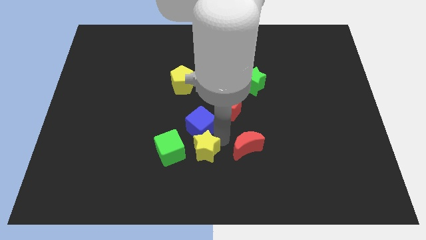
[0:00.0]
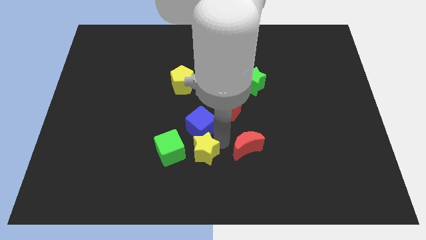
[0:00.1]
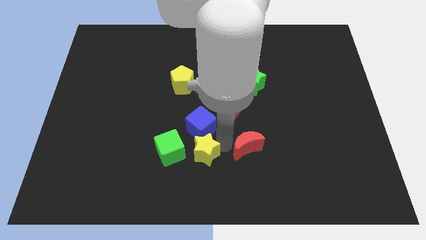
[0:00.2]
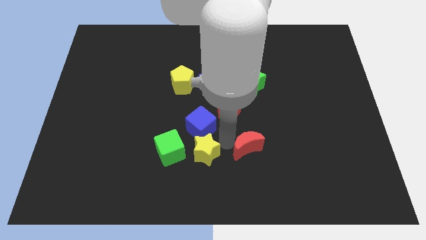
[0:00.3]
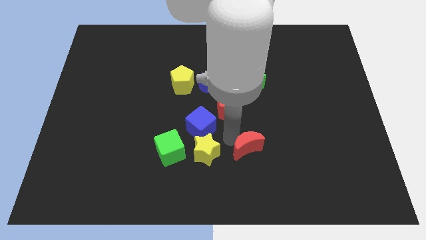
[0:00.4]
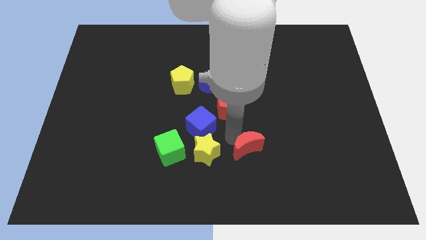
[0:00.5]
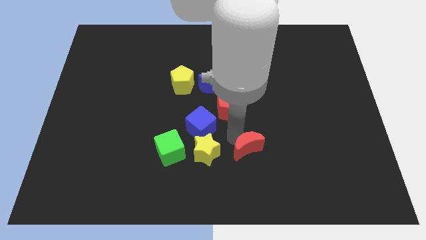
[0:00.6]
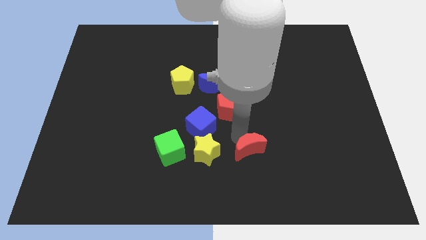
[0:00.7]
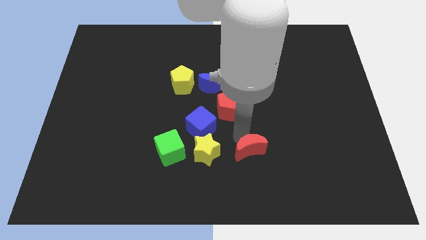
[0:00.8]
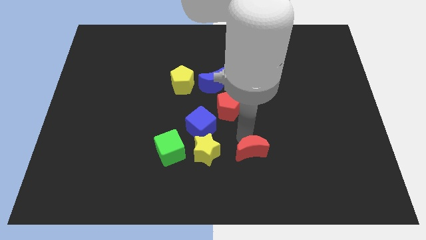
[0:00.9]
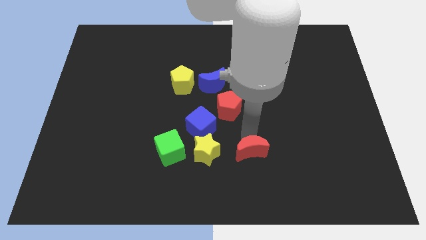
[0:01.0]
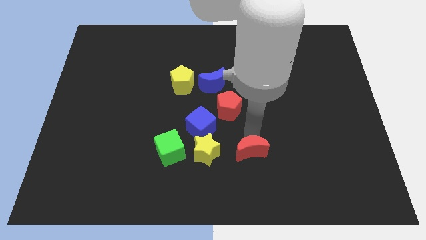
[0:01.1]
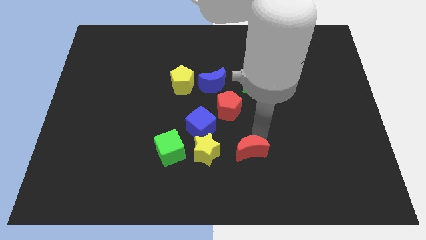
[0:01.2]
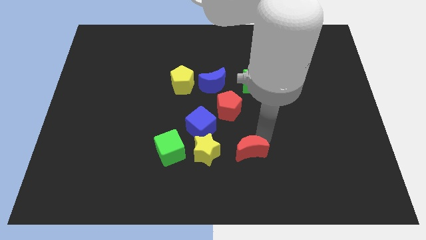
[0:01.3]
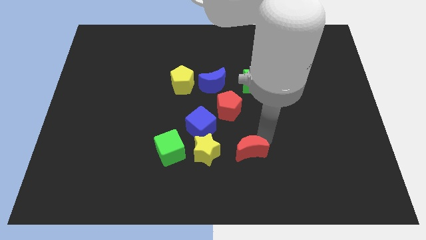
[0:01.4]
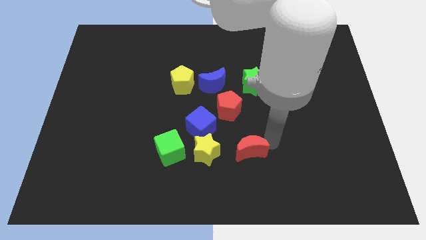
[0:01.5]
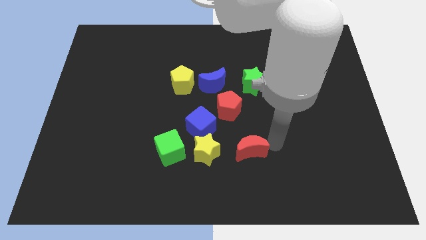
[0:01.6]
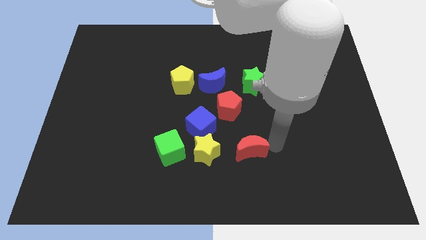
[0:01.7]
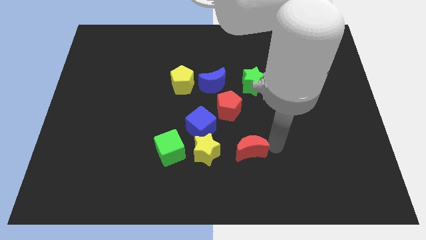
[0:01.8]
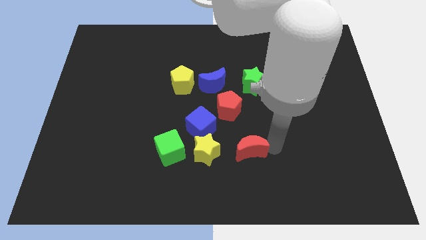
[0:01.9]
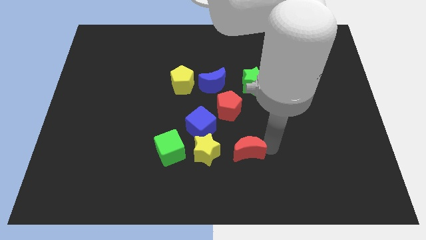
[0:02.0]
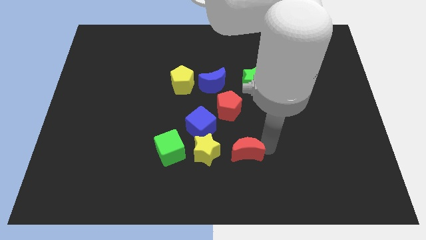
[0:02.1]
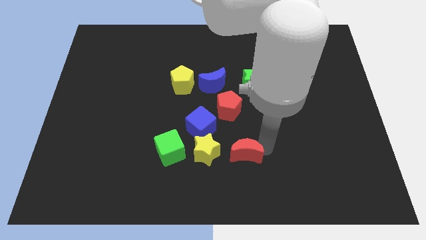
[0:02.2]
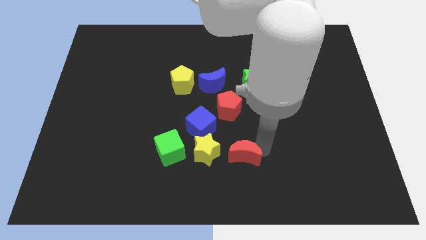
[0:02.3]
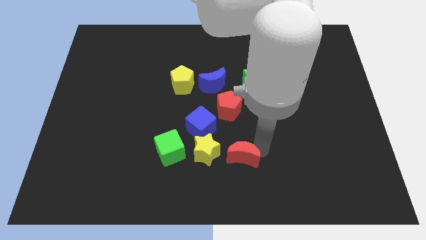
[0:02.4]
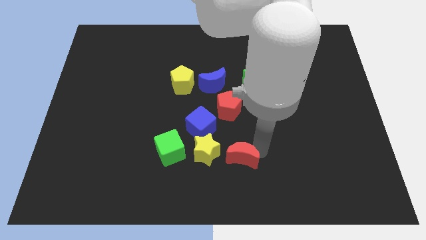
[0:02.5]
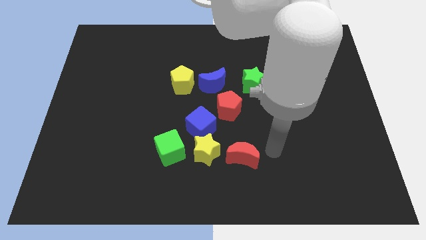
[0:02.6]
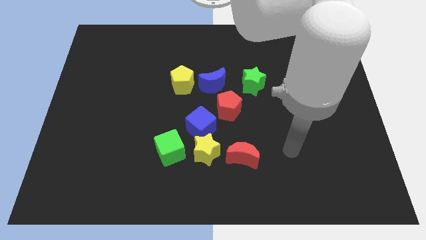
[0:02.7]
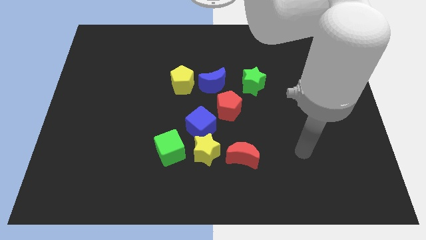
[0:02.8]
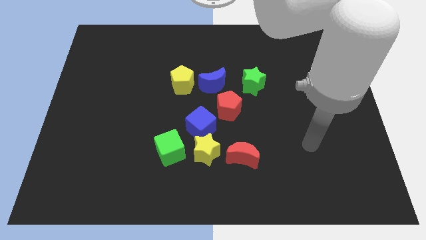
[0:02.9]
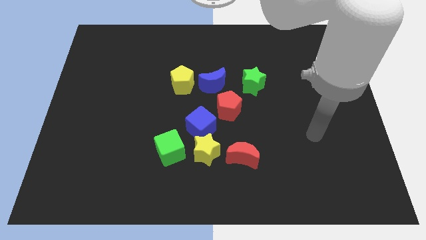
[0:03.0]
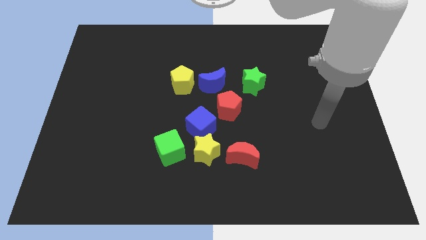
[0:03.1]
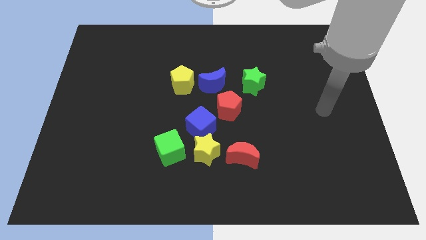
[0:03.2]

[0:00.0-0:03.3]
move the red moon close to the right side of the yellow star

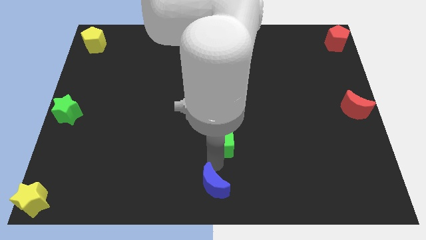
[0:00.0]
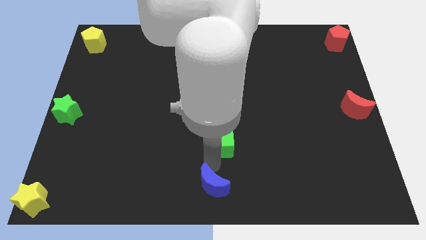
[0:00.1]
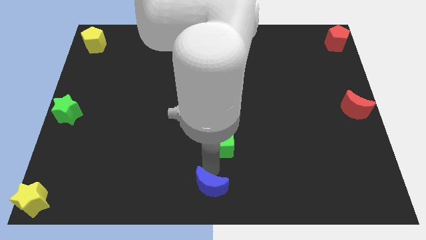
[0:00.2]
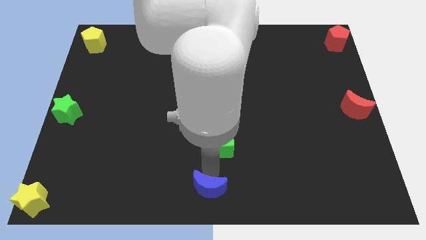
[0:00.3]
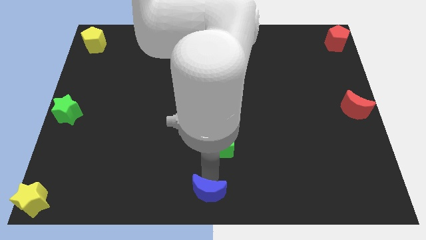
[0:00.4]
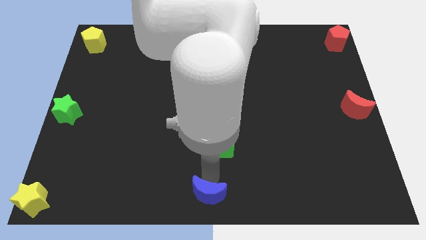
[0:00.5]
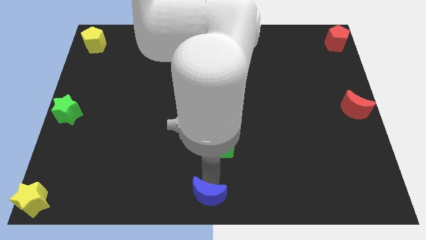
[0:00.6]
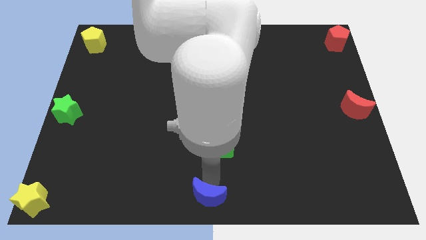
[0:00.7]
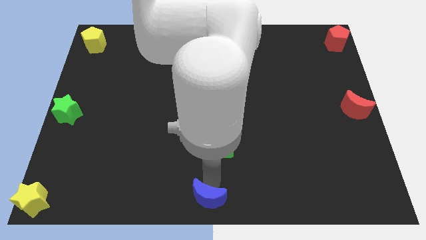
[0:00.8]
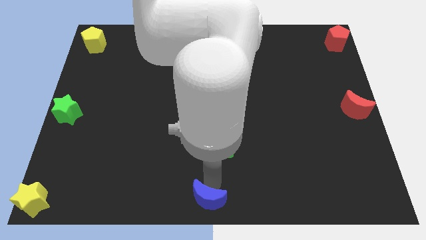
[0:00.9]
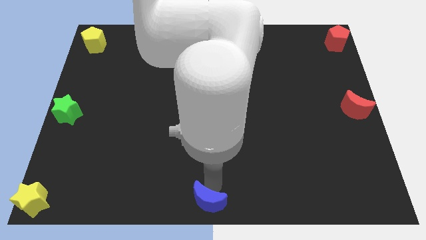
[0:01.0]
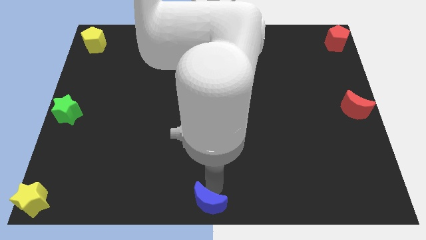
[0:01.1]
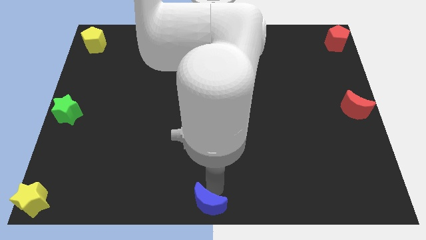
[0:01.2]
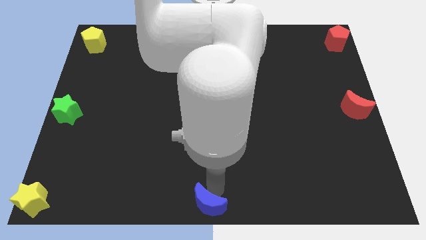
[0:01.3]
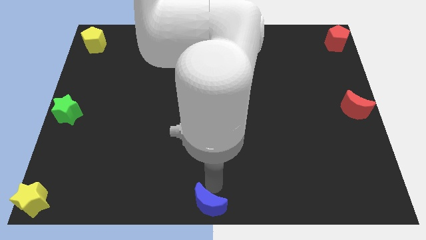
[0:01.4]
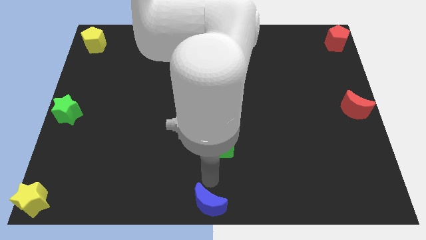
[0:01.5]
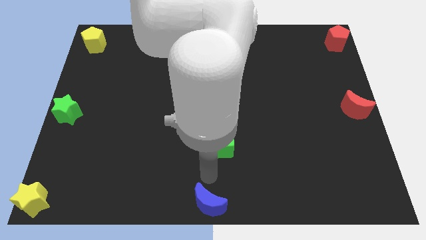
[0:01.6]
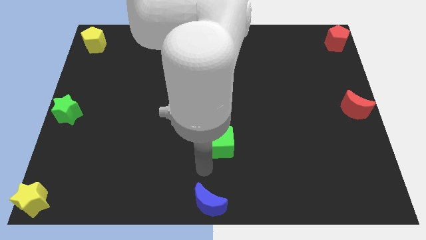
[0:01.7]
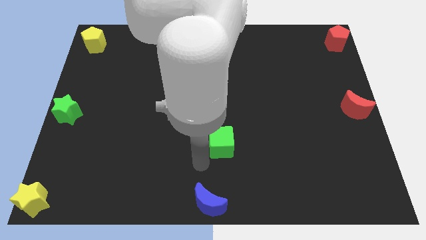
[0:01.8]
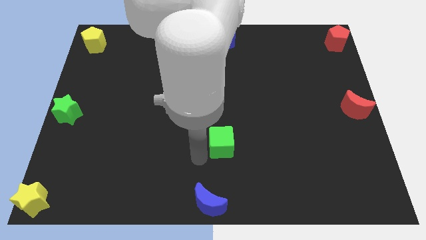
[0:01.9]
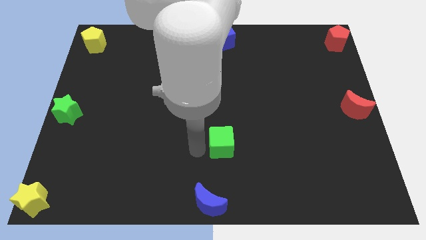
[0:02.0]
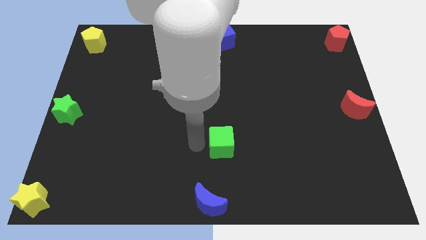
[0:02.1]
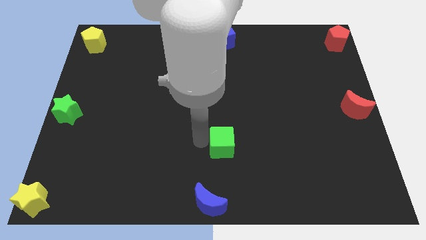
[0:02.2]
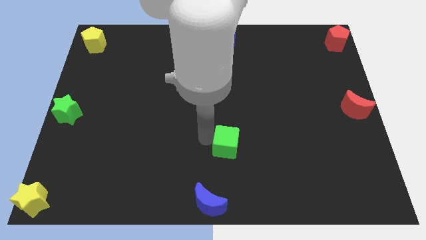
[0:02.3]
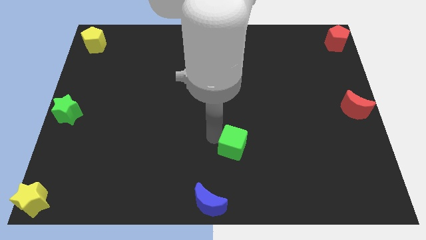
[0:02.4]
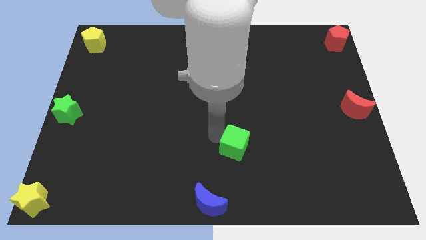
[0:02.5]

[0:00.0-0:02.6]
move the blue moon to the bottom center of the board

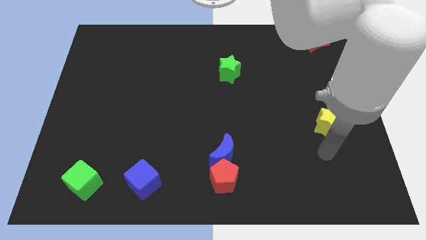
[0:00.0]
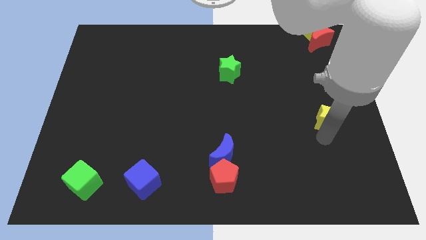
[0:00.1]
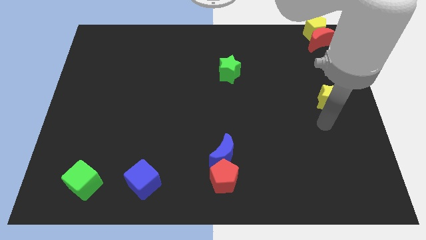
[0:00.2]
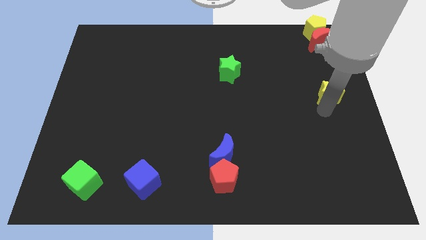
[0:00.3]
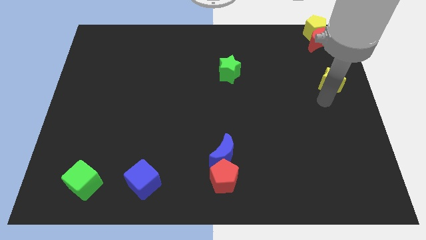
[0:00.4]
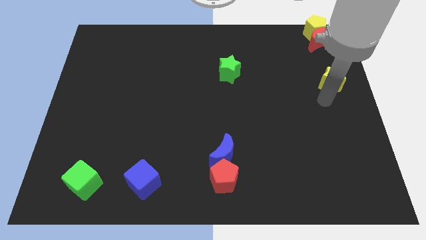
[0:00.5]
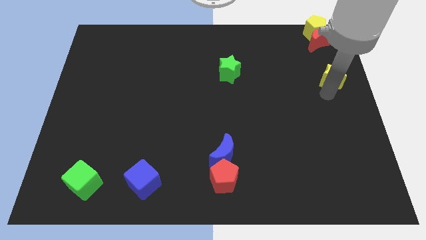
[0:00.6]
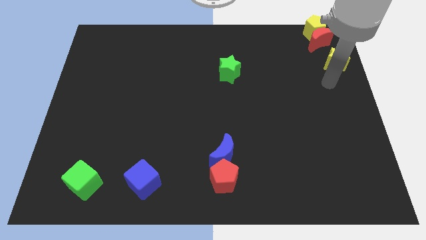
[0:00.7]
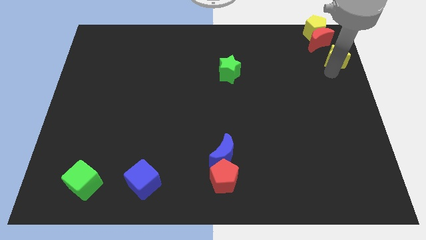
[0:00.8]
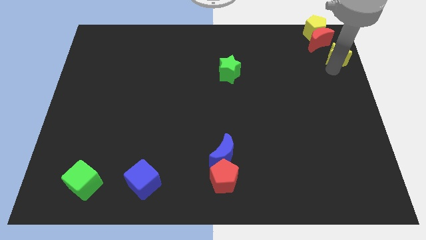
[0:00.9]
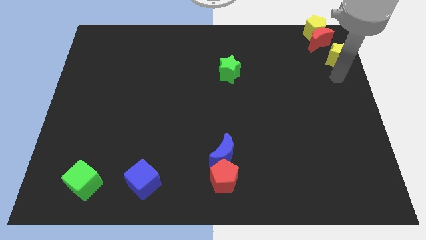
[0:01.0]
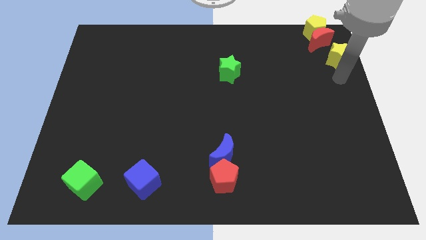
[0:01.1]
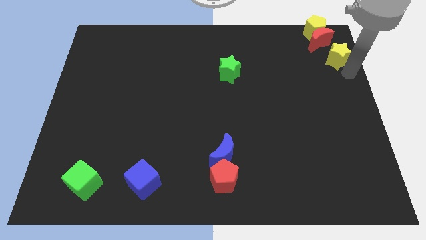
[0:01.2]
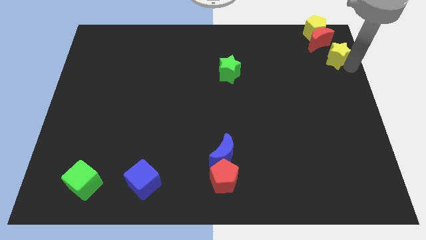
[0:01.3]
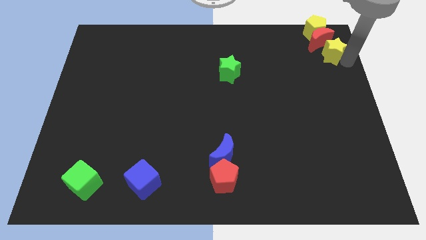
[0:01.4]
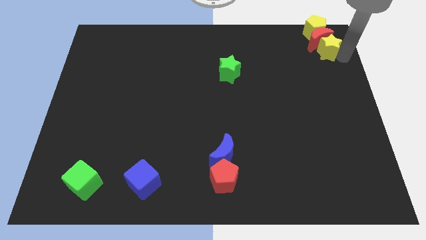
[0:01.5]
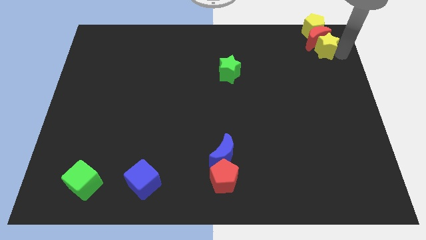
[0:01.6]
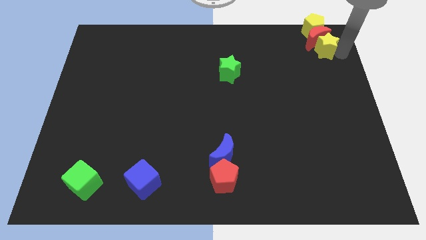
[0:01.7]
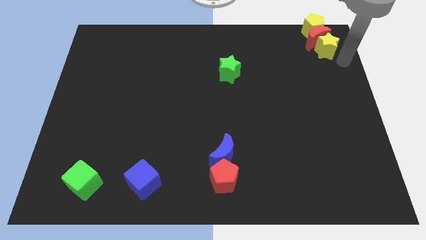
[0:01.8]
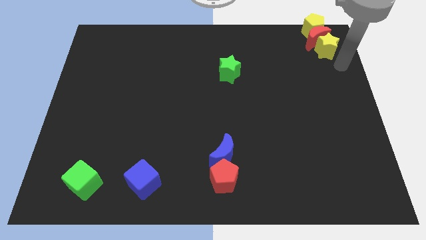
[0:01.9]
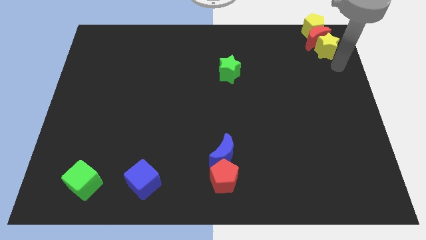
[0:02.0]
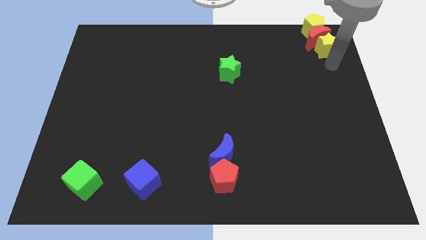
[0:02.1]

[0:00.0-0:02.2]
push the yellow star to bottom of red moon

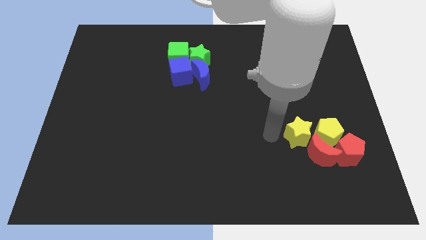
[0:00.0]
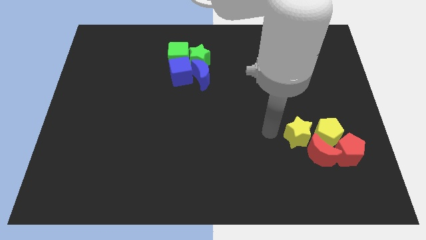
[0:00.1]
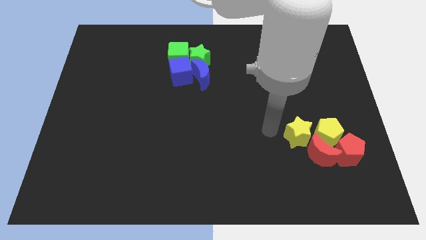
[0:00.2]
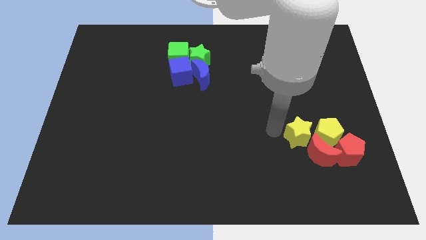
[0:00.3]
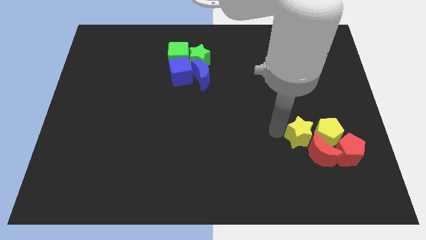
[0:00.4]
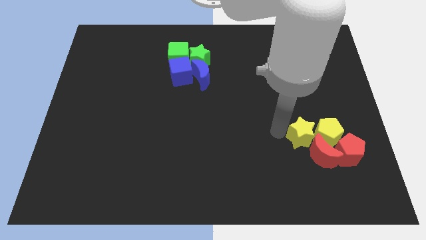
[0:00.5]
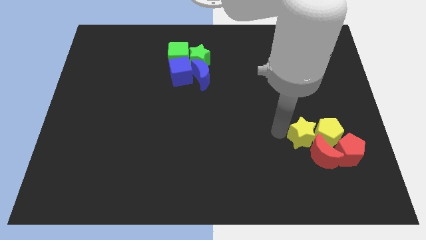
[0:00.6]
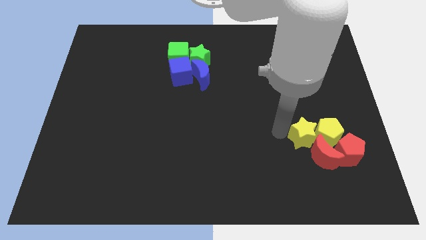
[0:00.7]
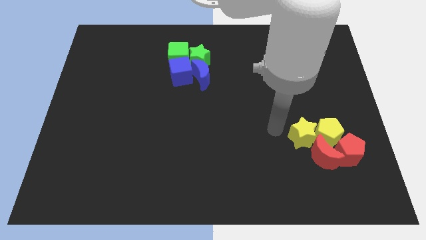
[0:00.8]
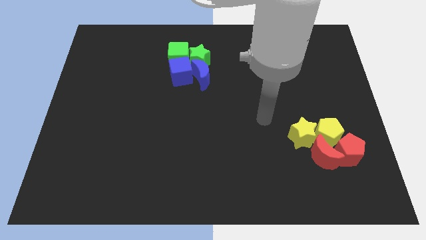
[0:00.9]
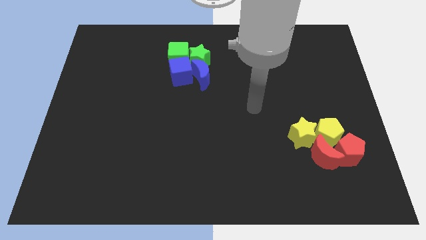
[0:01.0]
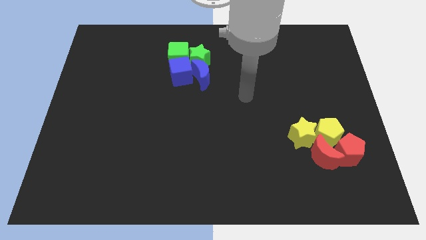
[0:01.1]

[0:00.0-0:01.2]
push the yellow star into the left side of the yellow pentagon

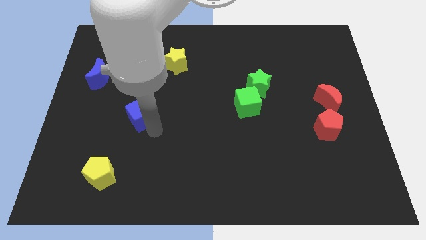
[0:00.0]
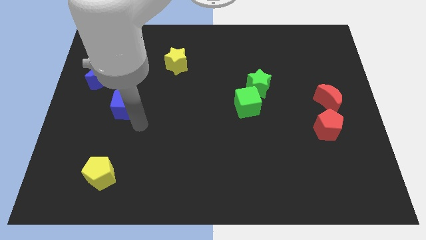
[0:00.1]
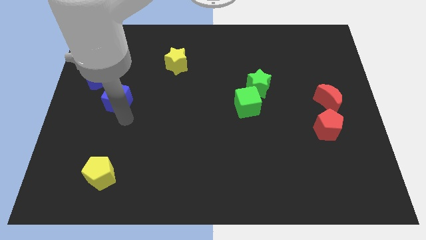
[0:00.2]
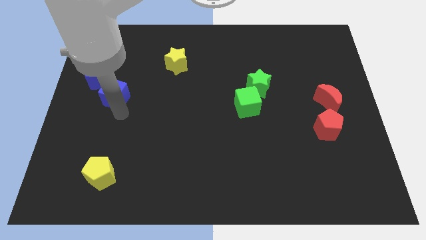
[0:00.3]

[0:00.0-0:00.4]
slide blue block into blue crescent
